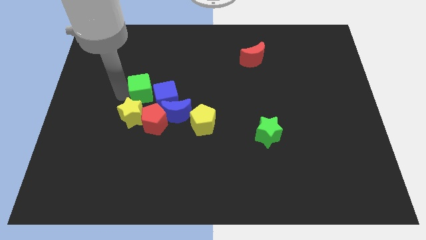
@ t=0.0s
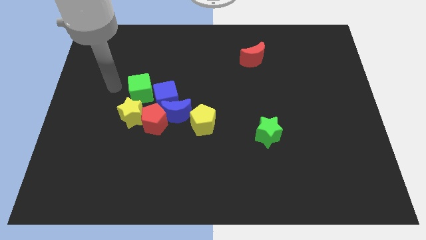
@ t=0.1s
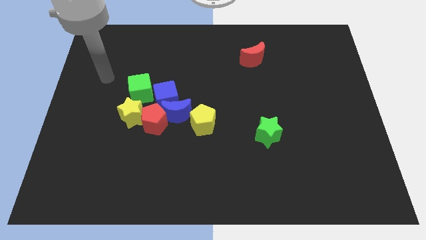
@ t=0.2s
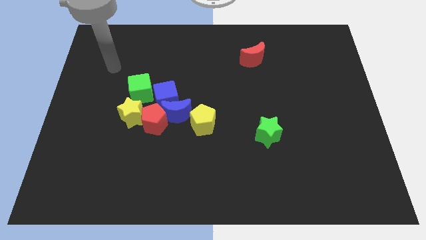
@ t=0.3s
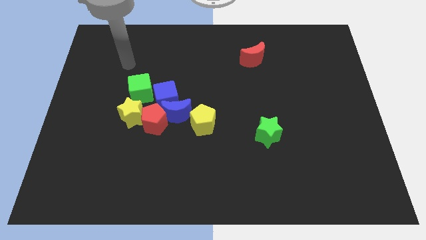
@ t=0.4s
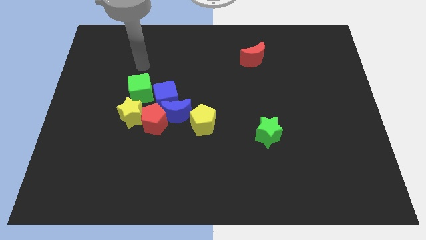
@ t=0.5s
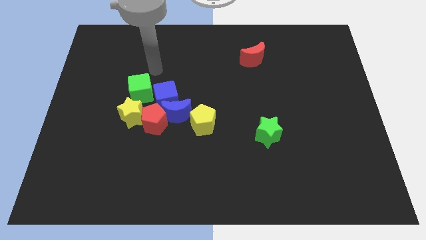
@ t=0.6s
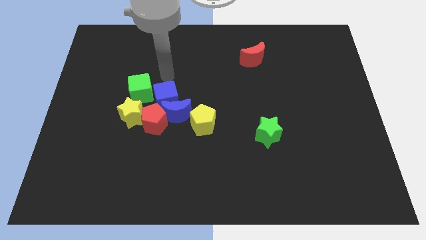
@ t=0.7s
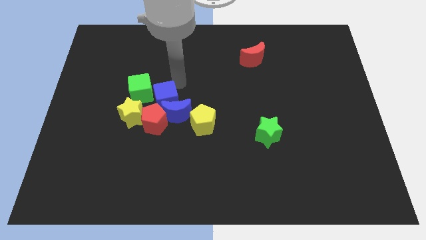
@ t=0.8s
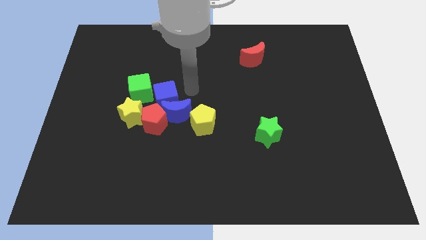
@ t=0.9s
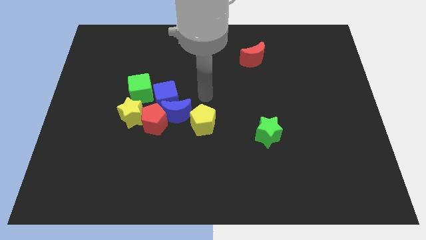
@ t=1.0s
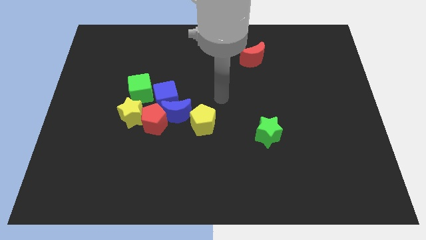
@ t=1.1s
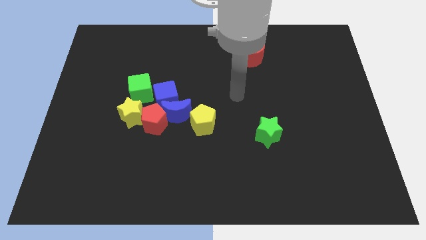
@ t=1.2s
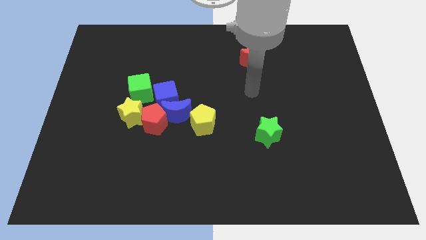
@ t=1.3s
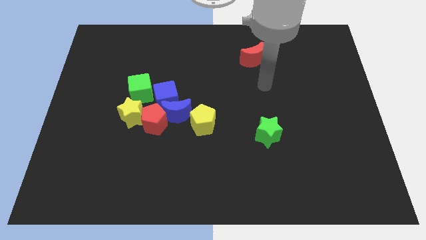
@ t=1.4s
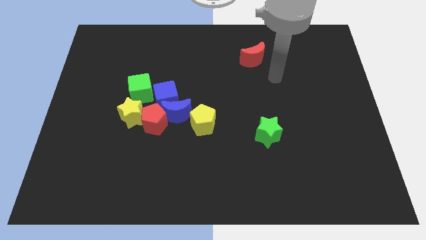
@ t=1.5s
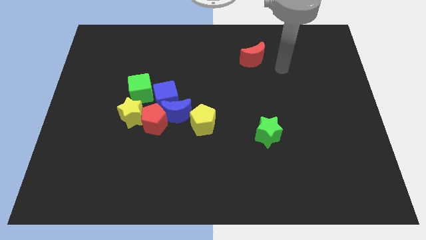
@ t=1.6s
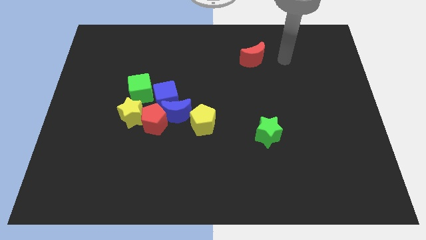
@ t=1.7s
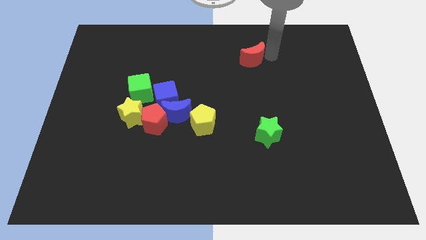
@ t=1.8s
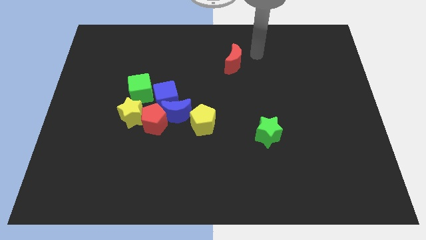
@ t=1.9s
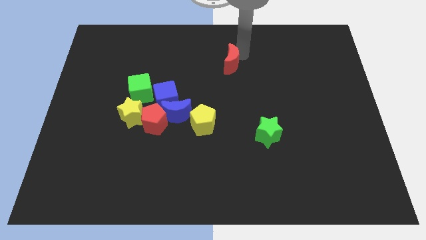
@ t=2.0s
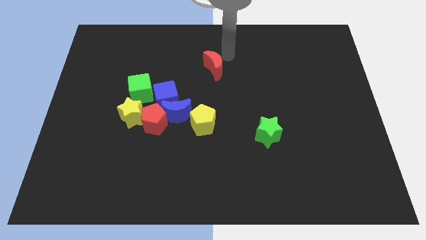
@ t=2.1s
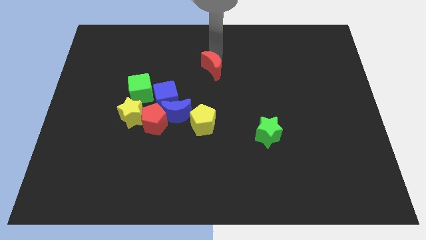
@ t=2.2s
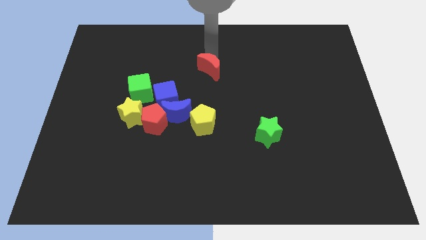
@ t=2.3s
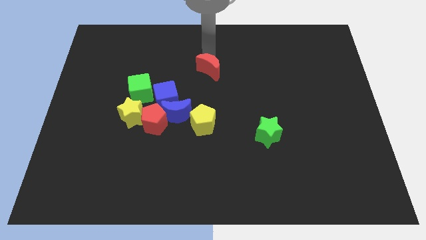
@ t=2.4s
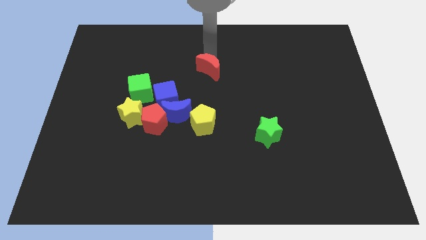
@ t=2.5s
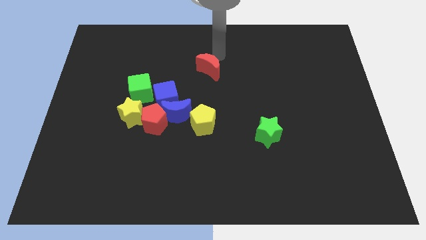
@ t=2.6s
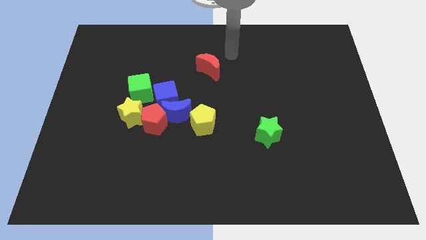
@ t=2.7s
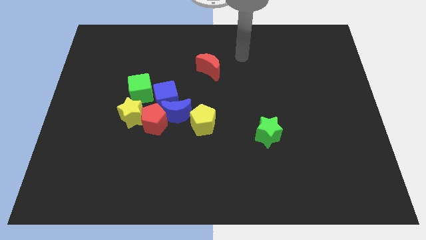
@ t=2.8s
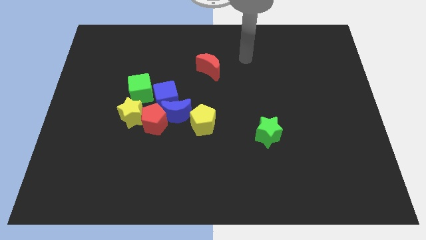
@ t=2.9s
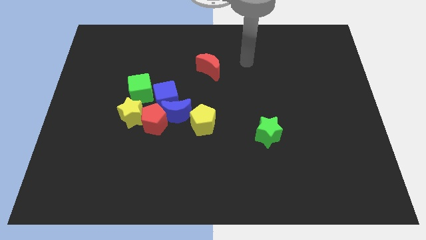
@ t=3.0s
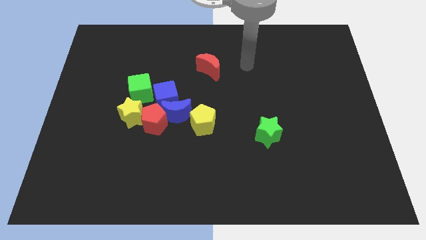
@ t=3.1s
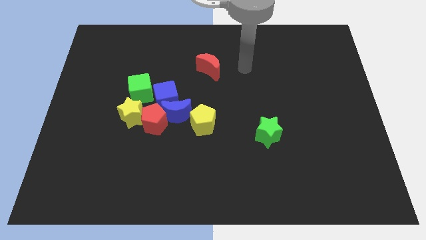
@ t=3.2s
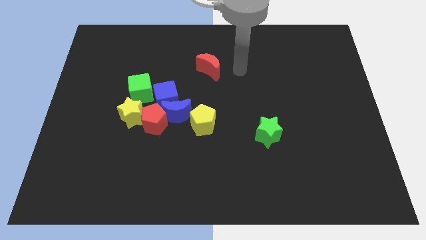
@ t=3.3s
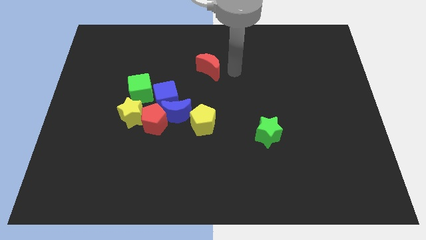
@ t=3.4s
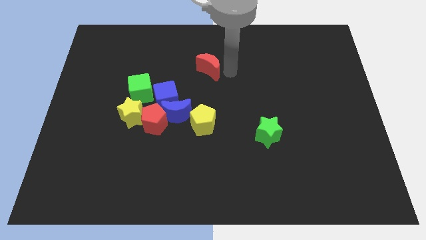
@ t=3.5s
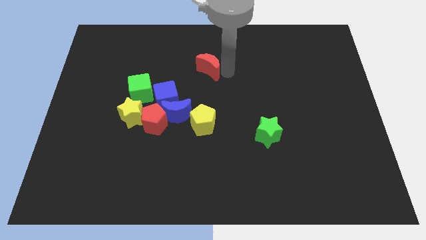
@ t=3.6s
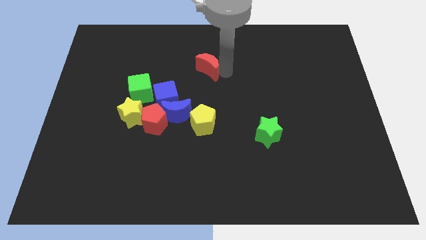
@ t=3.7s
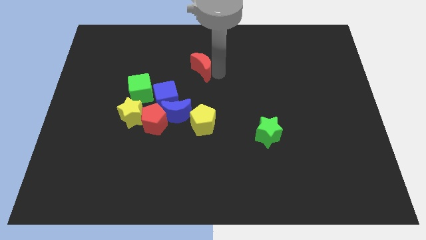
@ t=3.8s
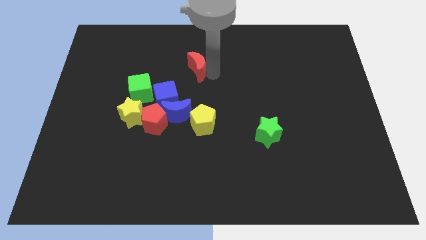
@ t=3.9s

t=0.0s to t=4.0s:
move the red crescent to the top of the yellow pentagon

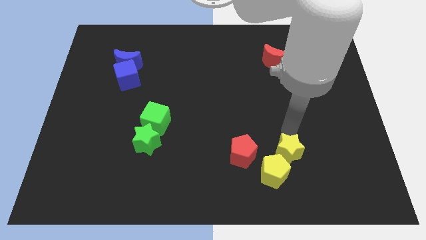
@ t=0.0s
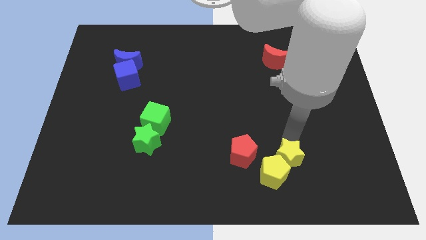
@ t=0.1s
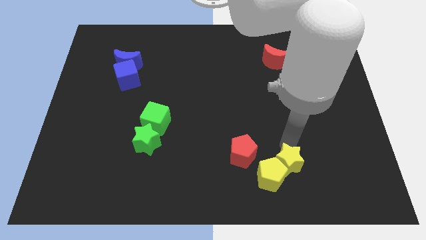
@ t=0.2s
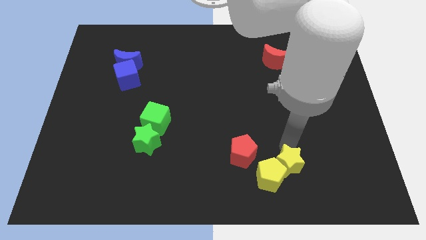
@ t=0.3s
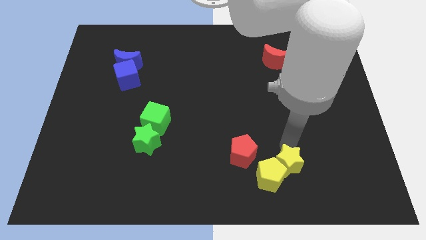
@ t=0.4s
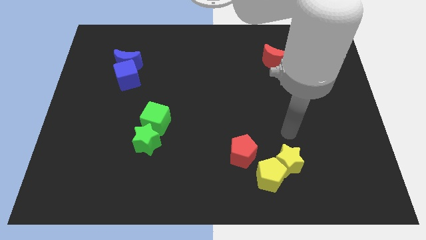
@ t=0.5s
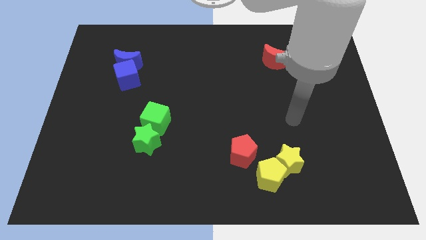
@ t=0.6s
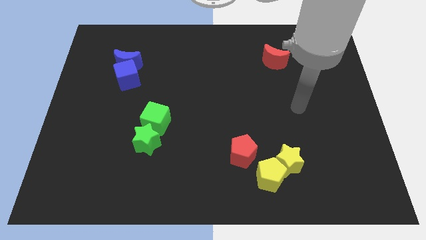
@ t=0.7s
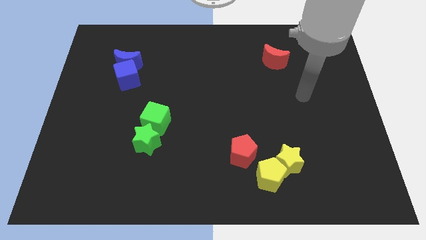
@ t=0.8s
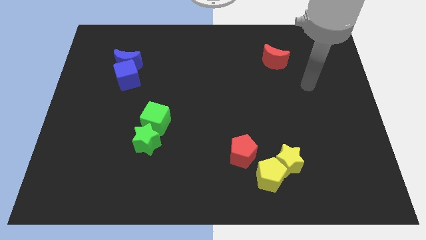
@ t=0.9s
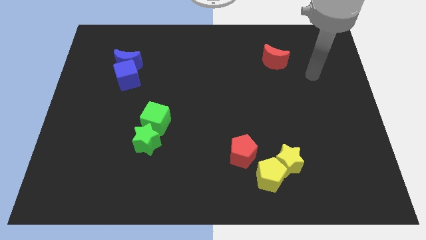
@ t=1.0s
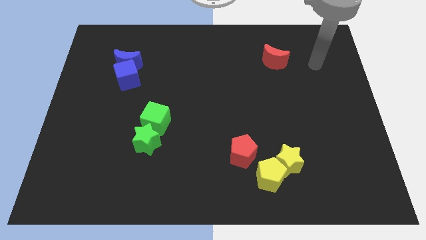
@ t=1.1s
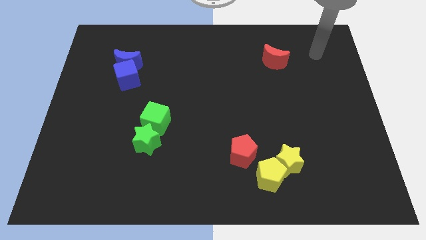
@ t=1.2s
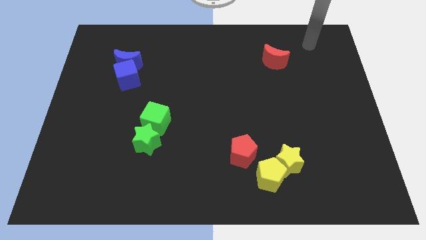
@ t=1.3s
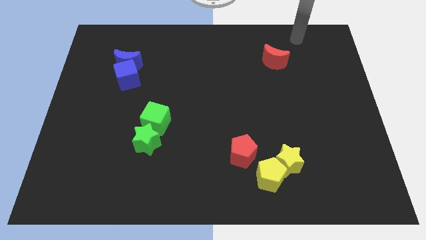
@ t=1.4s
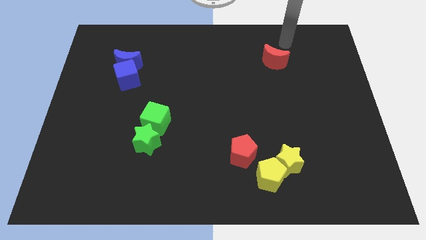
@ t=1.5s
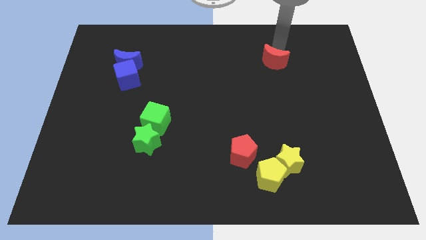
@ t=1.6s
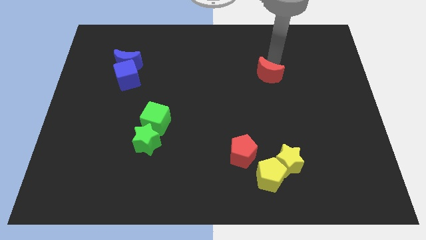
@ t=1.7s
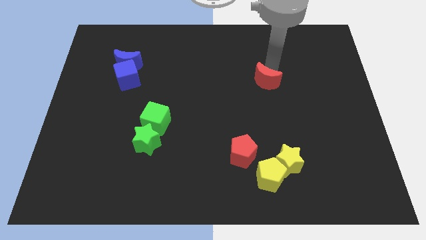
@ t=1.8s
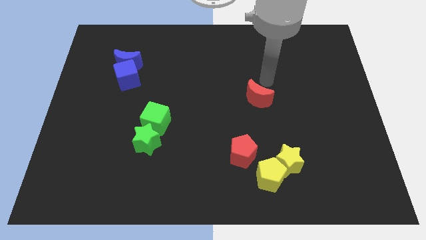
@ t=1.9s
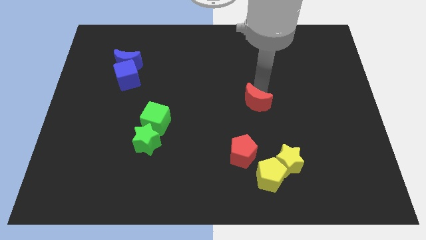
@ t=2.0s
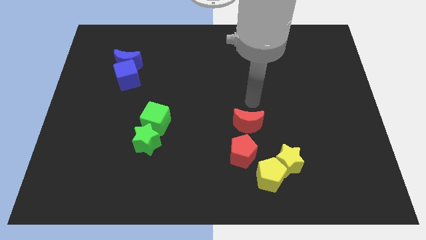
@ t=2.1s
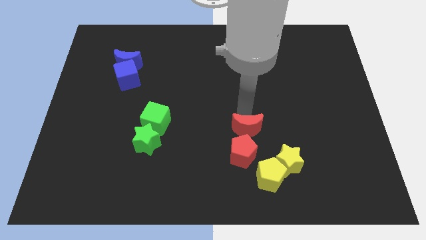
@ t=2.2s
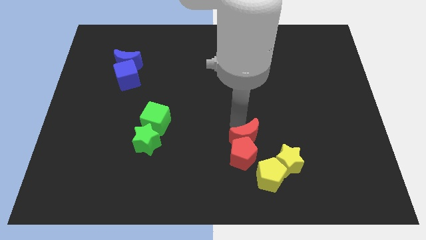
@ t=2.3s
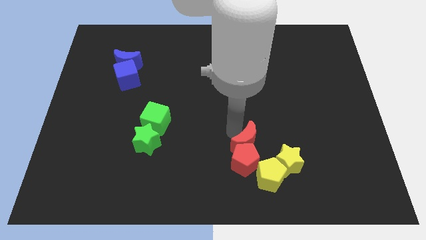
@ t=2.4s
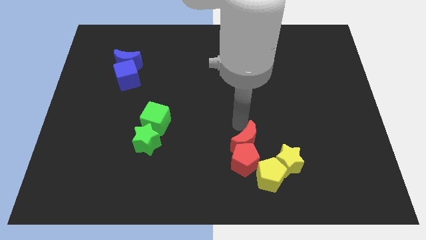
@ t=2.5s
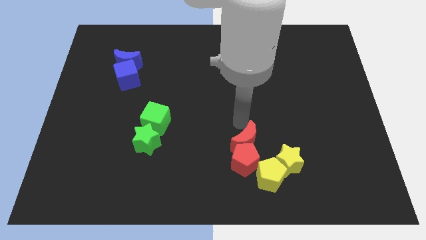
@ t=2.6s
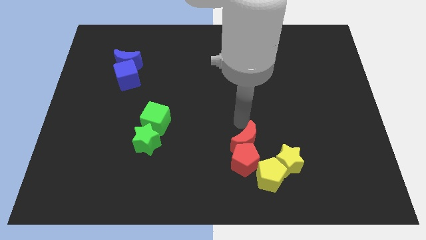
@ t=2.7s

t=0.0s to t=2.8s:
push the red moon into the red pentagon

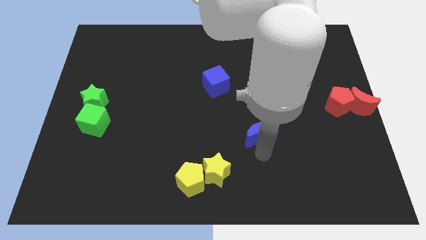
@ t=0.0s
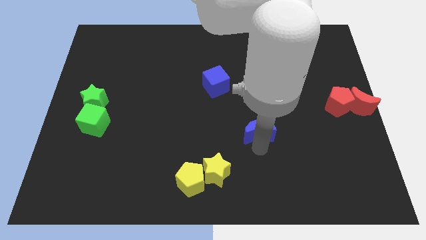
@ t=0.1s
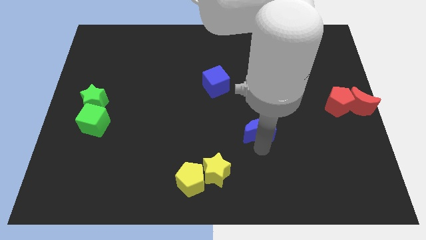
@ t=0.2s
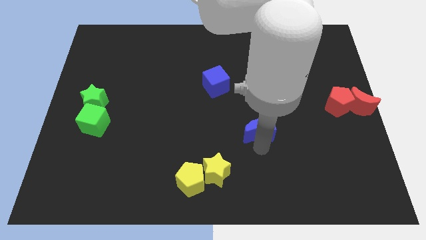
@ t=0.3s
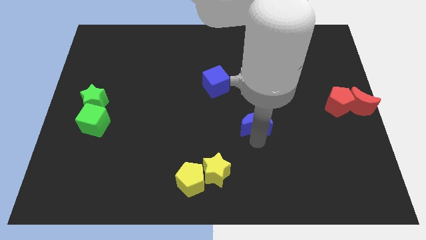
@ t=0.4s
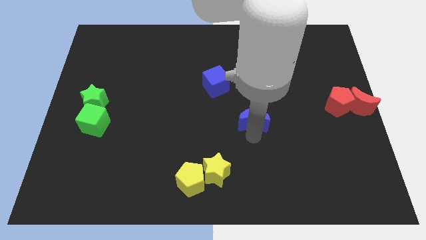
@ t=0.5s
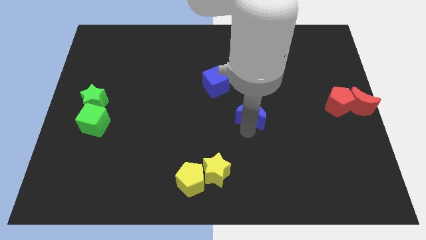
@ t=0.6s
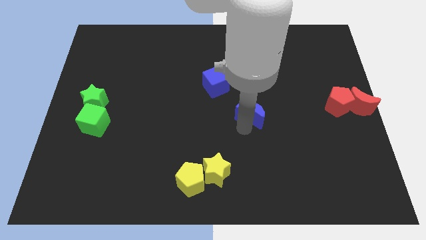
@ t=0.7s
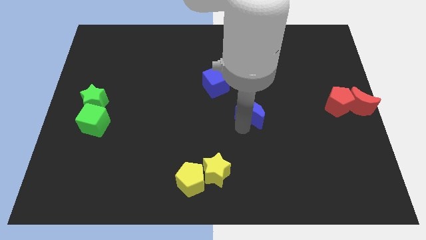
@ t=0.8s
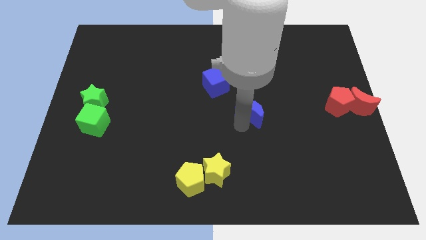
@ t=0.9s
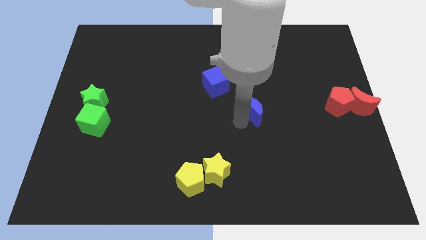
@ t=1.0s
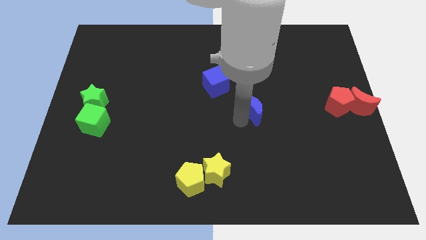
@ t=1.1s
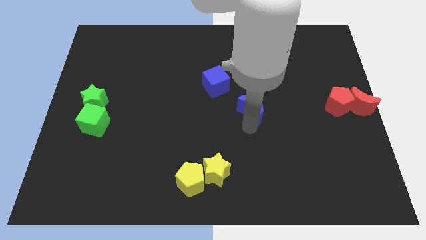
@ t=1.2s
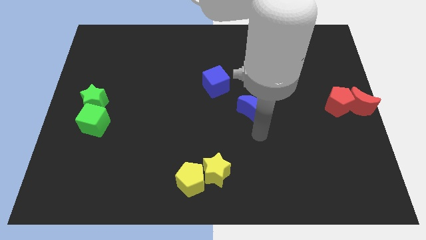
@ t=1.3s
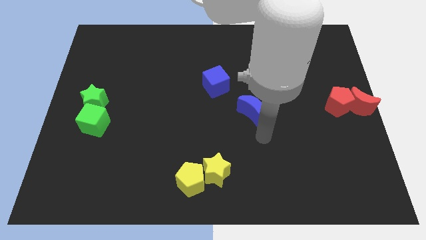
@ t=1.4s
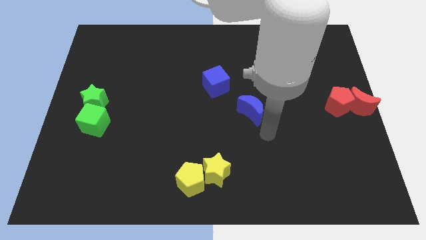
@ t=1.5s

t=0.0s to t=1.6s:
place the blue crescent close to the blue cube

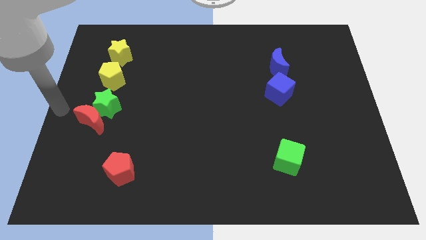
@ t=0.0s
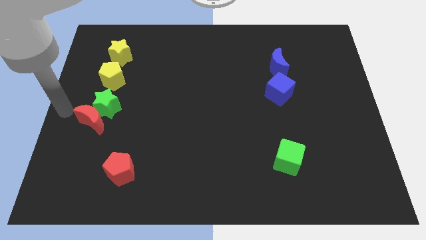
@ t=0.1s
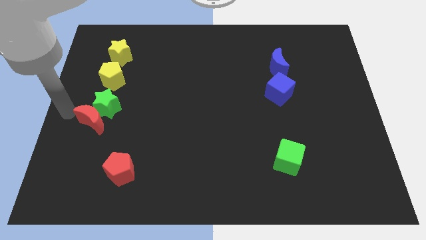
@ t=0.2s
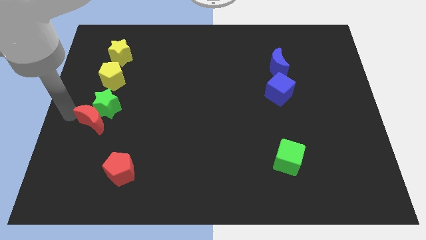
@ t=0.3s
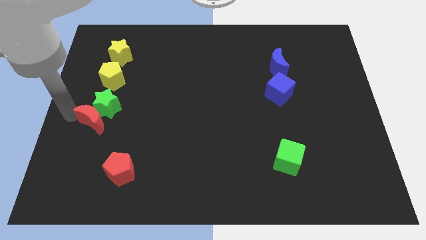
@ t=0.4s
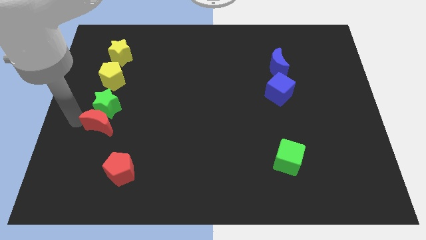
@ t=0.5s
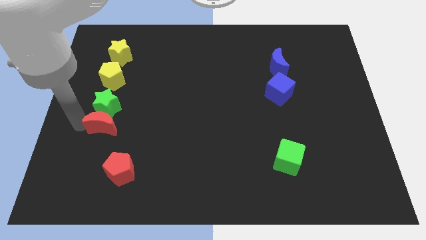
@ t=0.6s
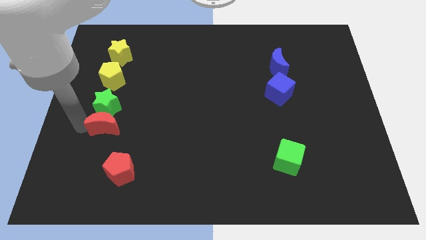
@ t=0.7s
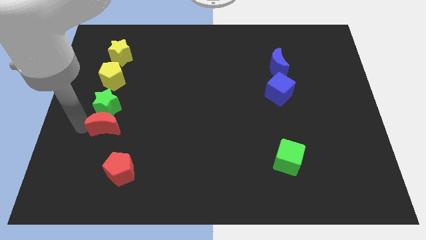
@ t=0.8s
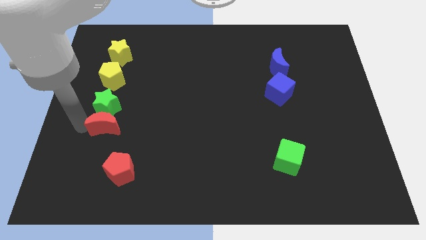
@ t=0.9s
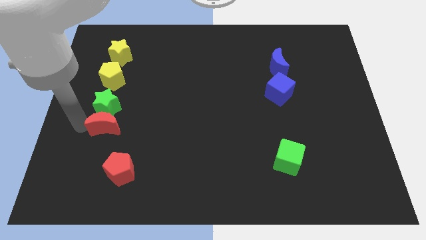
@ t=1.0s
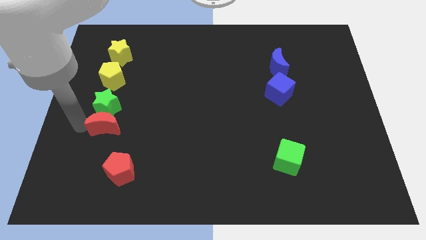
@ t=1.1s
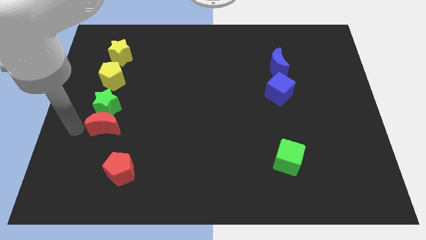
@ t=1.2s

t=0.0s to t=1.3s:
put the red crescent below the green star
